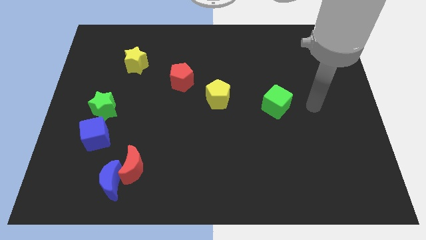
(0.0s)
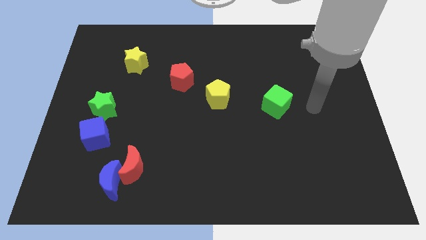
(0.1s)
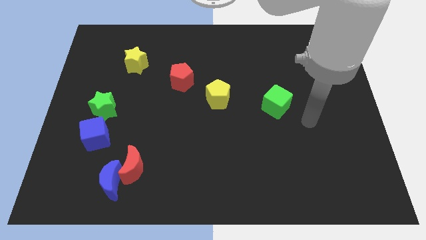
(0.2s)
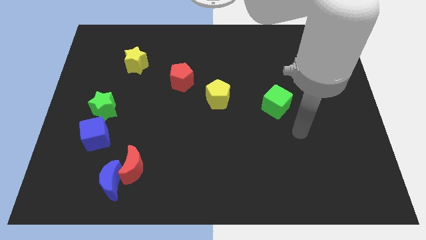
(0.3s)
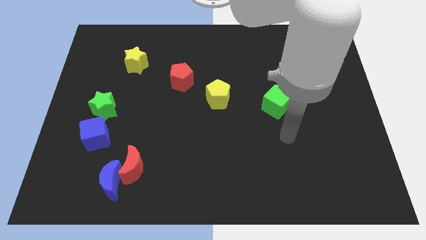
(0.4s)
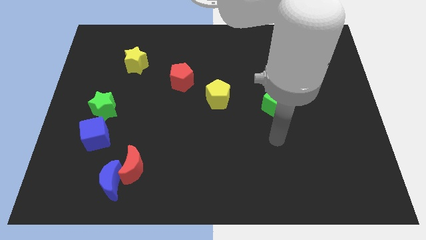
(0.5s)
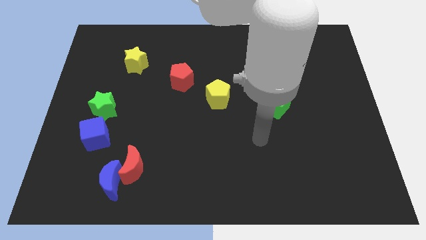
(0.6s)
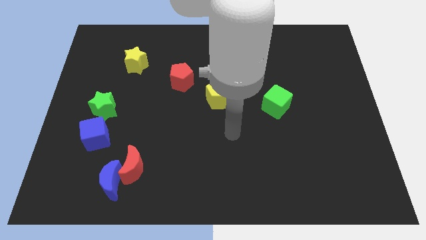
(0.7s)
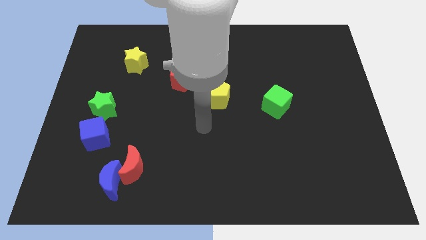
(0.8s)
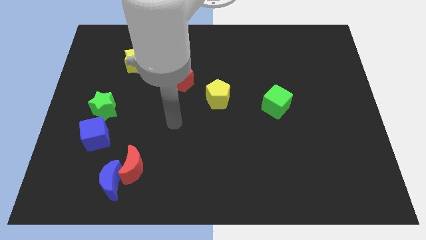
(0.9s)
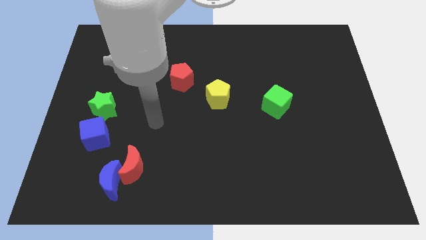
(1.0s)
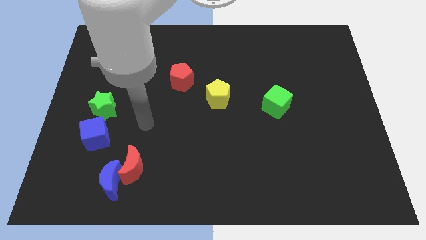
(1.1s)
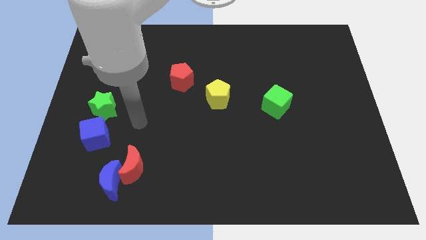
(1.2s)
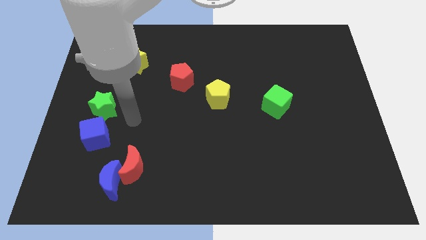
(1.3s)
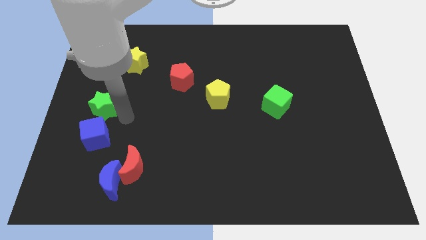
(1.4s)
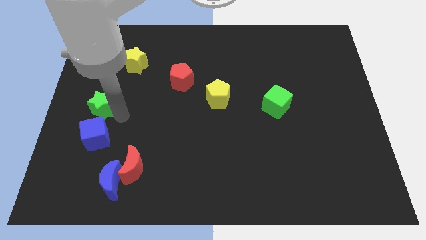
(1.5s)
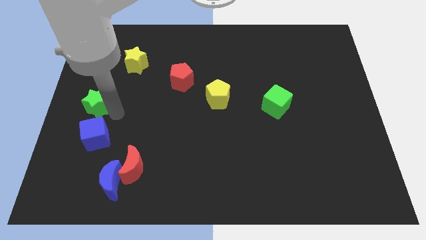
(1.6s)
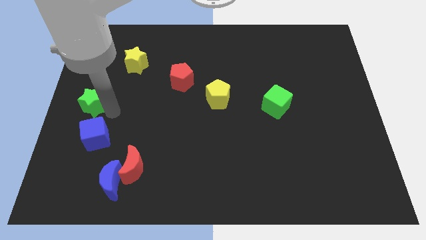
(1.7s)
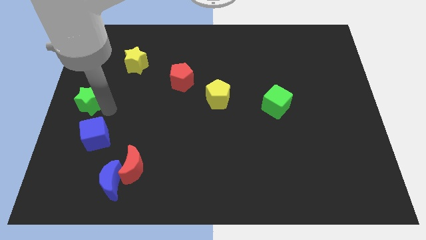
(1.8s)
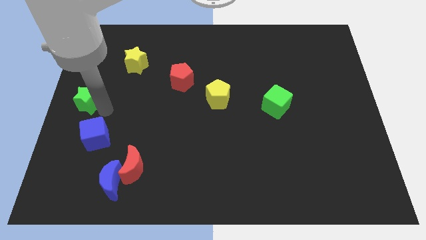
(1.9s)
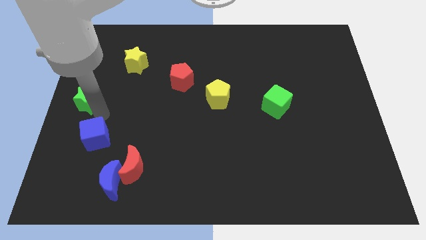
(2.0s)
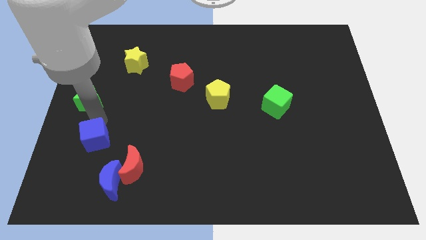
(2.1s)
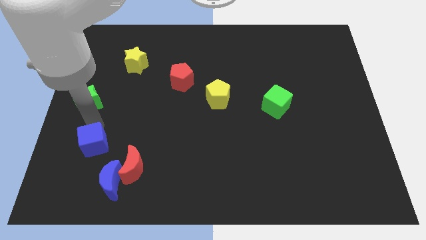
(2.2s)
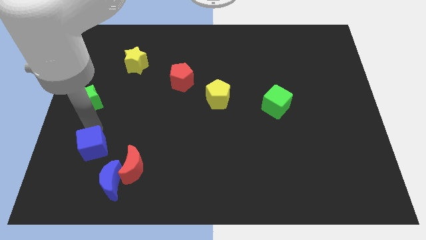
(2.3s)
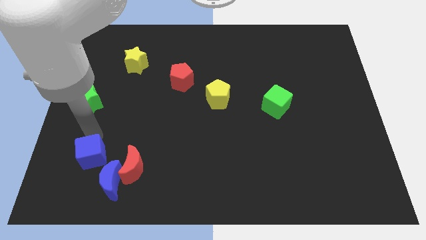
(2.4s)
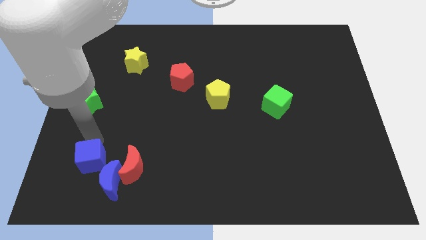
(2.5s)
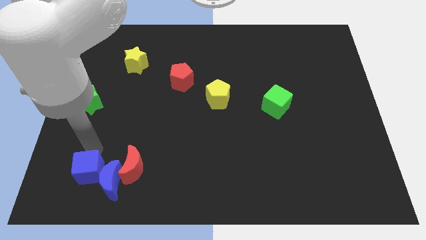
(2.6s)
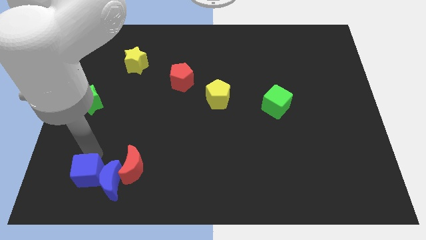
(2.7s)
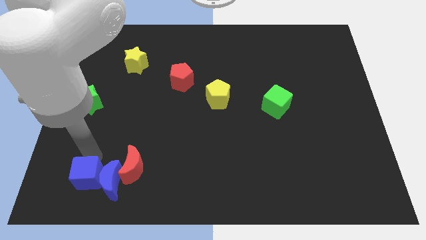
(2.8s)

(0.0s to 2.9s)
slide the blue cube close to the blue moon

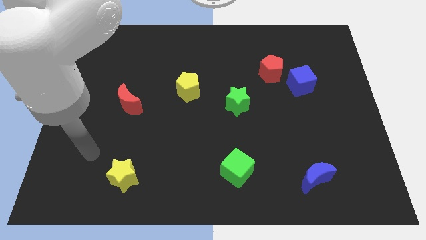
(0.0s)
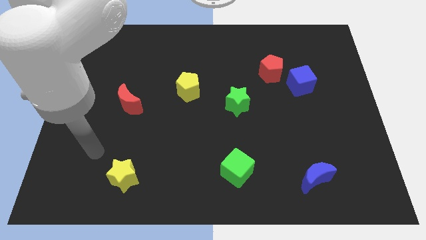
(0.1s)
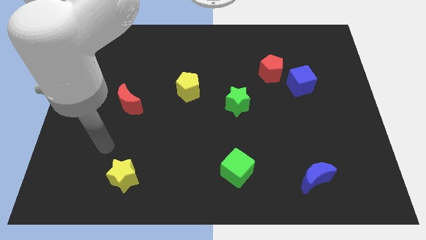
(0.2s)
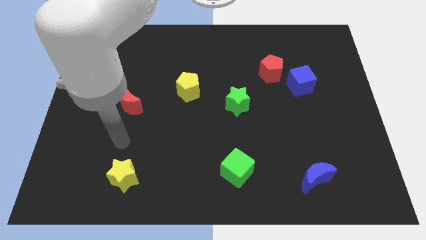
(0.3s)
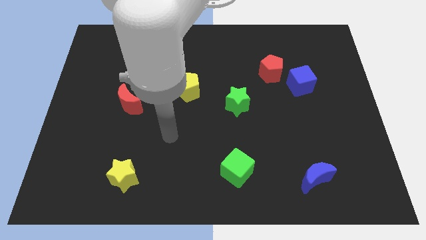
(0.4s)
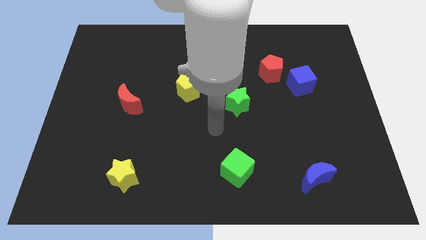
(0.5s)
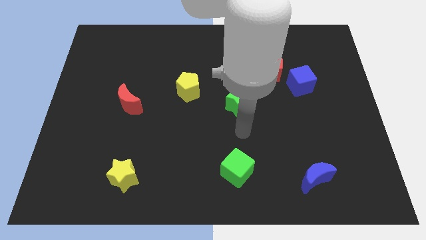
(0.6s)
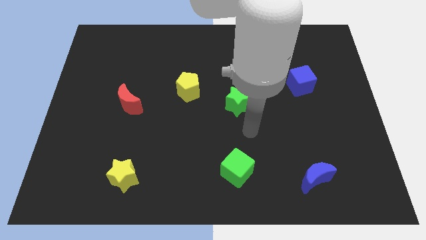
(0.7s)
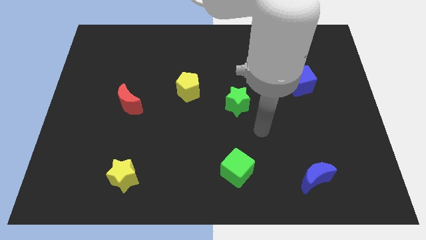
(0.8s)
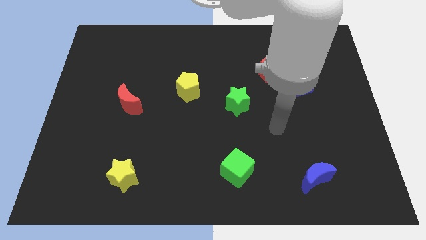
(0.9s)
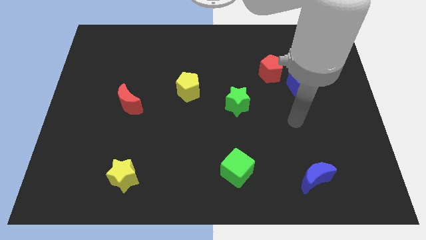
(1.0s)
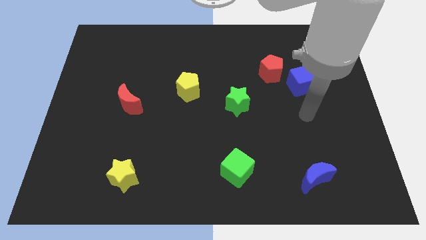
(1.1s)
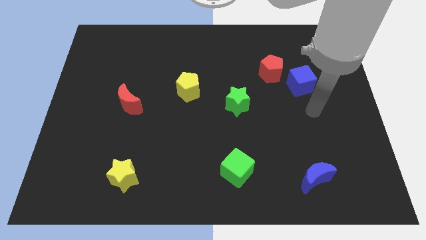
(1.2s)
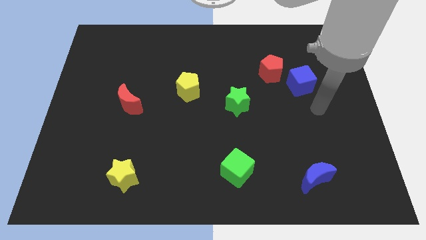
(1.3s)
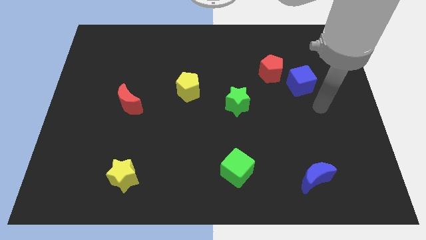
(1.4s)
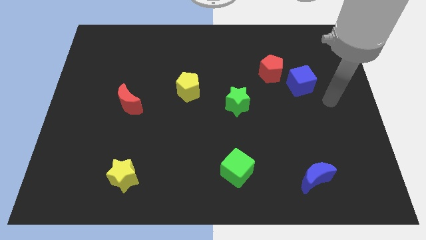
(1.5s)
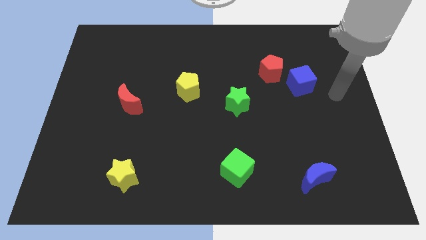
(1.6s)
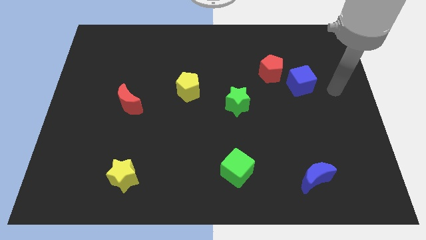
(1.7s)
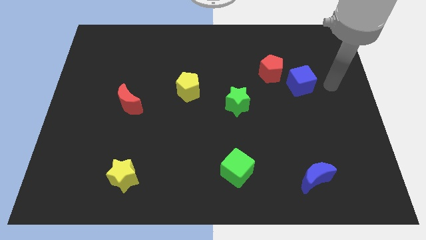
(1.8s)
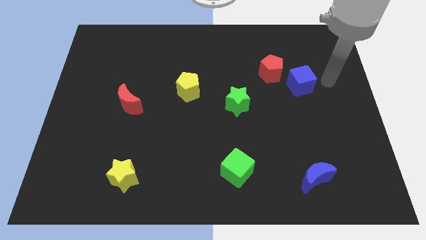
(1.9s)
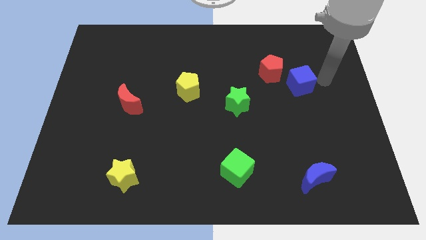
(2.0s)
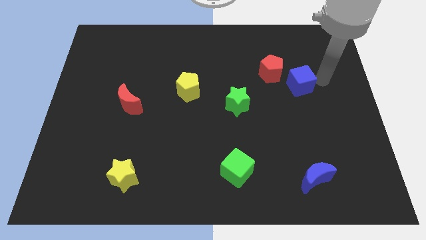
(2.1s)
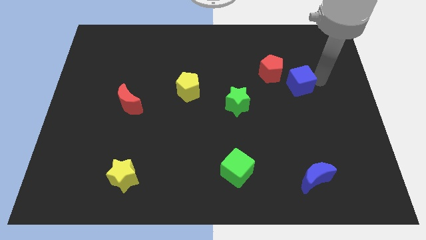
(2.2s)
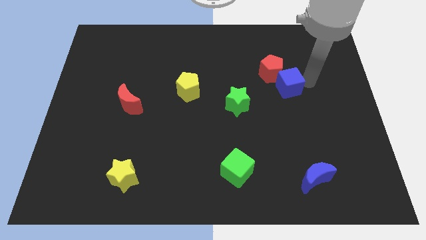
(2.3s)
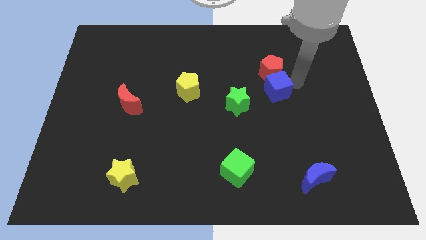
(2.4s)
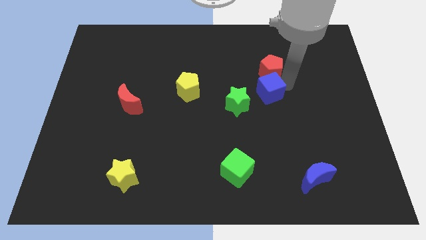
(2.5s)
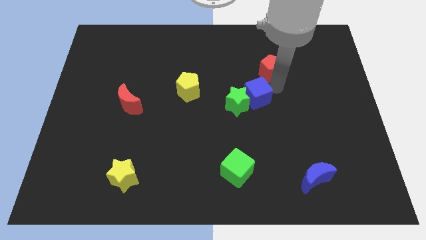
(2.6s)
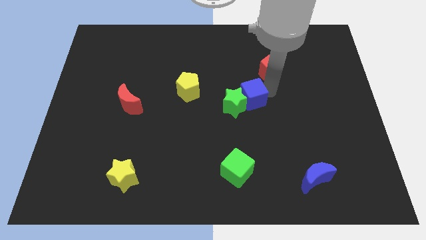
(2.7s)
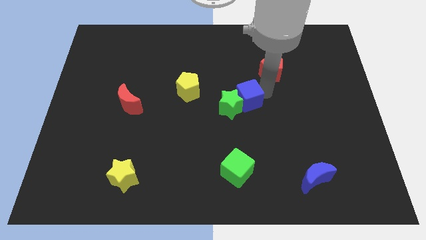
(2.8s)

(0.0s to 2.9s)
move the blue cube towards the green star

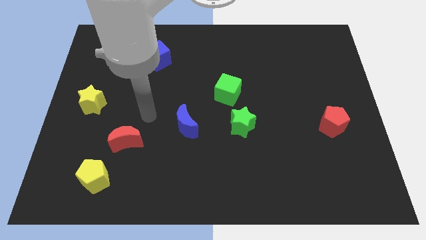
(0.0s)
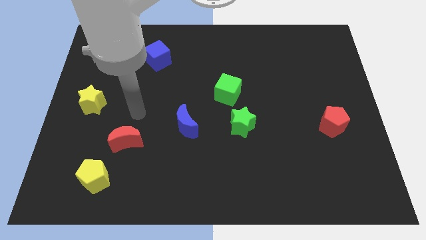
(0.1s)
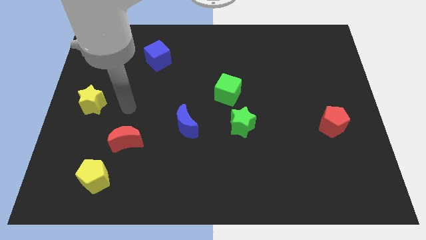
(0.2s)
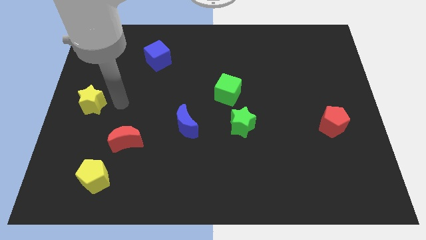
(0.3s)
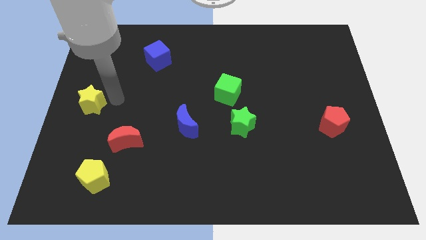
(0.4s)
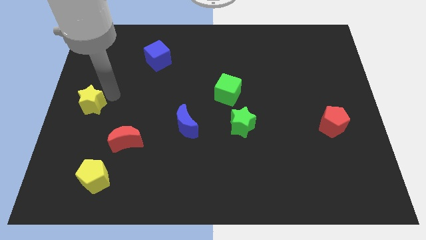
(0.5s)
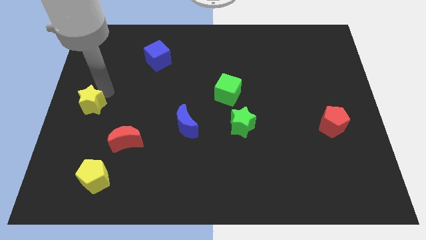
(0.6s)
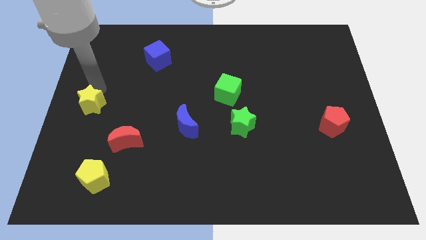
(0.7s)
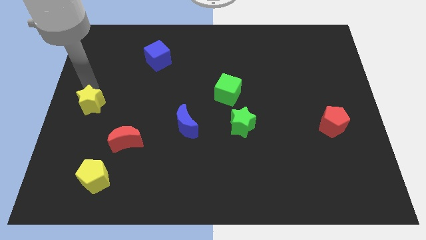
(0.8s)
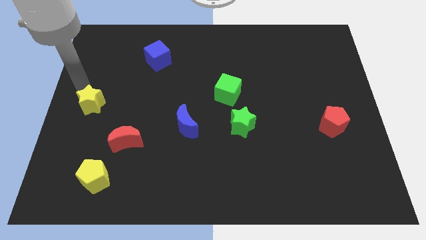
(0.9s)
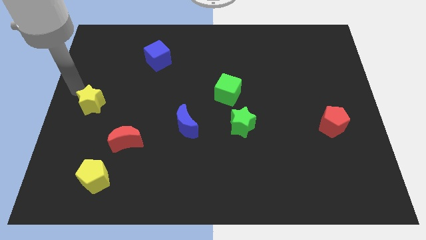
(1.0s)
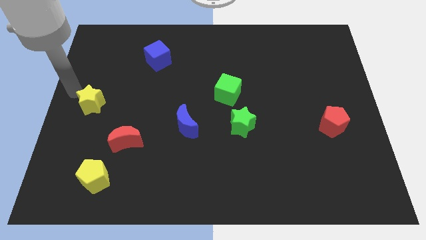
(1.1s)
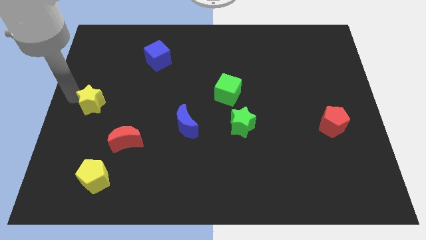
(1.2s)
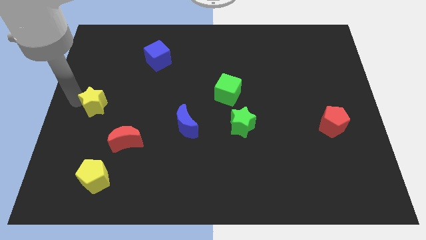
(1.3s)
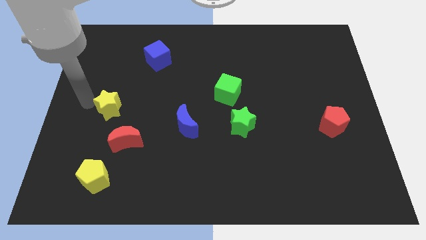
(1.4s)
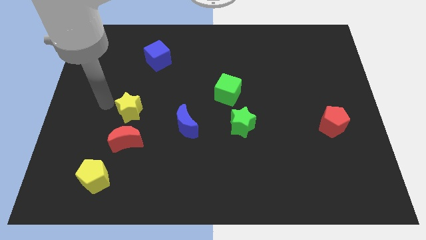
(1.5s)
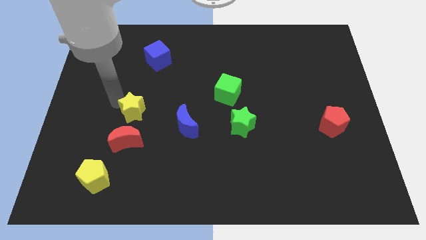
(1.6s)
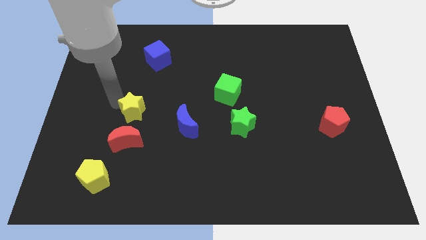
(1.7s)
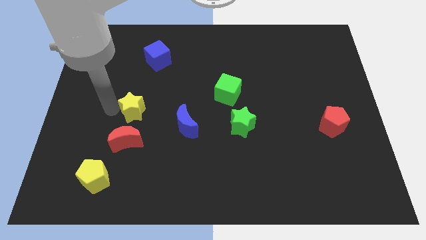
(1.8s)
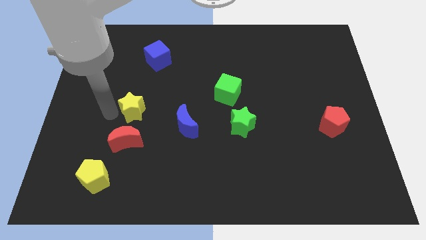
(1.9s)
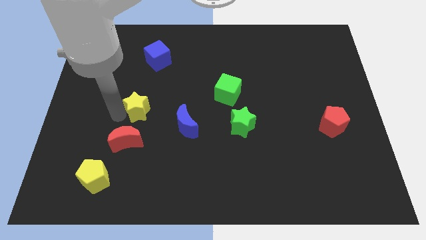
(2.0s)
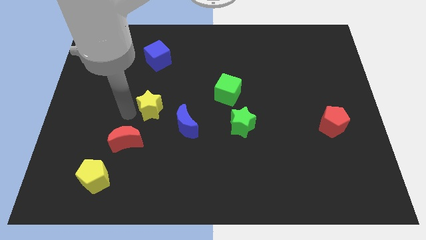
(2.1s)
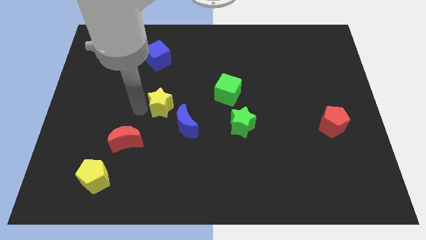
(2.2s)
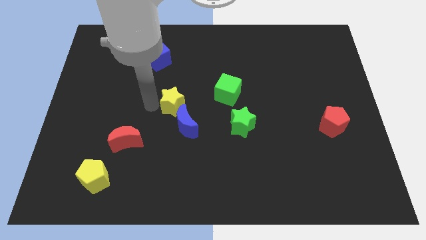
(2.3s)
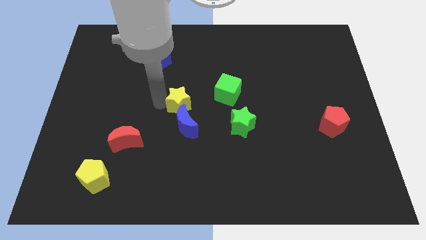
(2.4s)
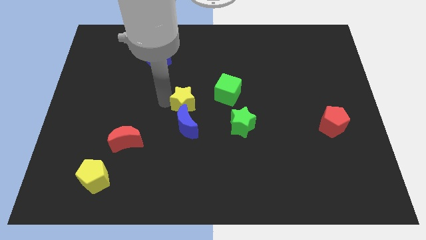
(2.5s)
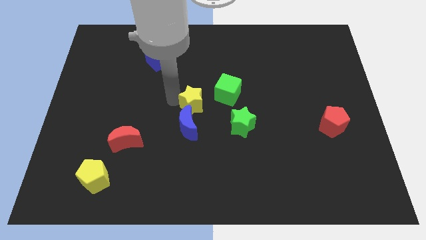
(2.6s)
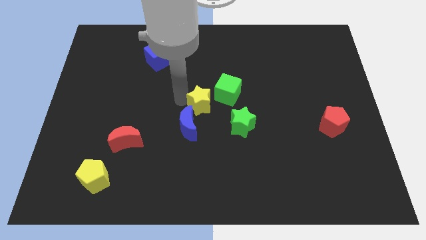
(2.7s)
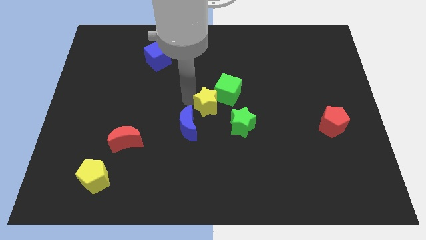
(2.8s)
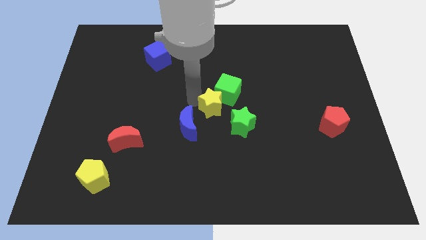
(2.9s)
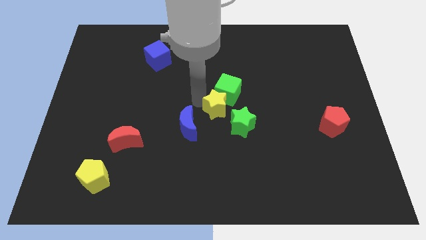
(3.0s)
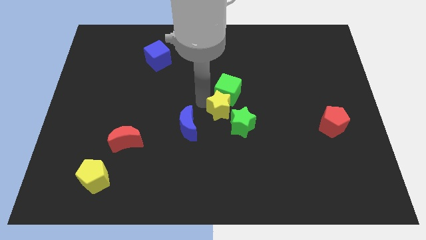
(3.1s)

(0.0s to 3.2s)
put the yellow star to the green cube
